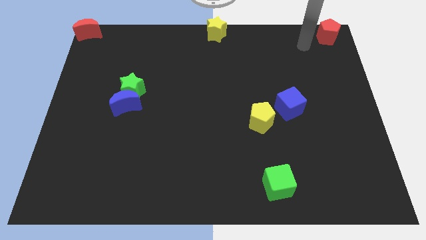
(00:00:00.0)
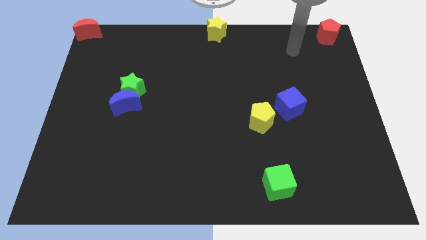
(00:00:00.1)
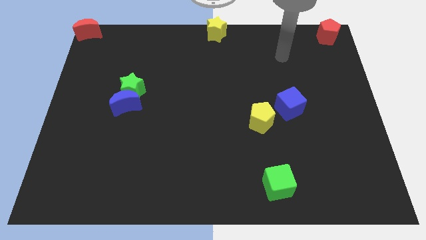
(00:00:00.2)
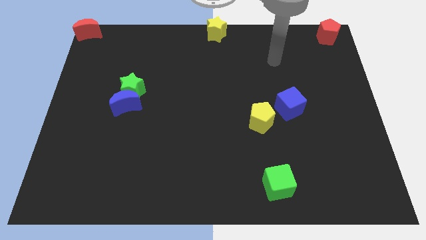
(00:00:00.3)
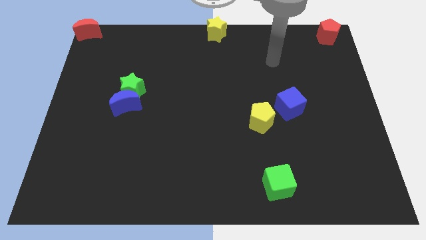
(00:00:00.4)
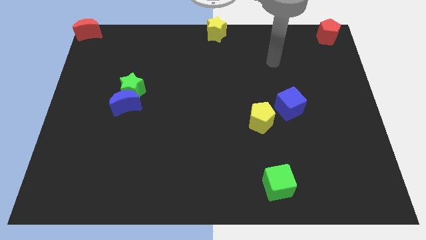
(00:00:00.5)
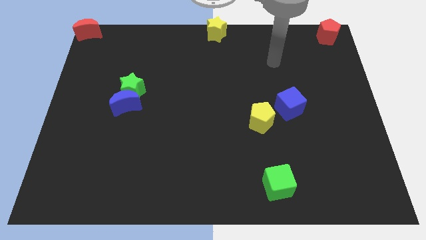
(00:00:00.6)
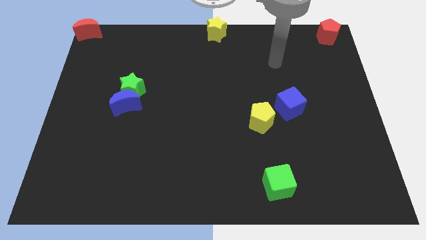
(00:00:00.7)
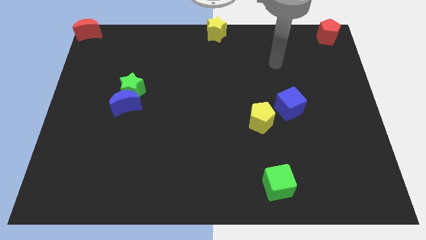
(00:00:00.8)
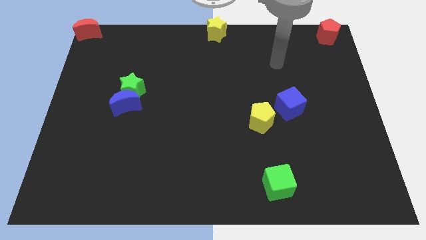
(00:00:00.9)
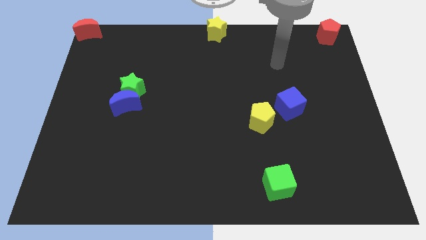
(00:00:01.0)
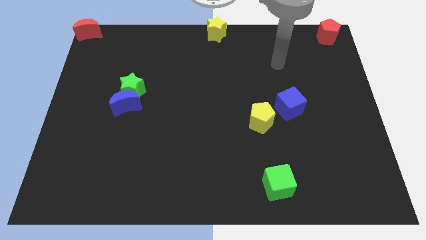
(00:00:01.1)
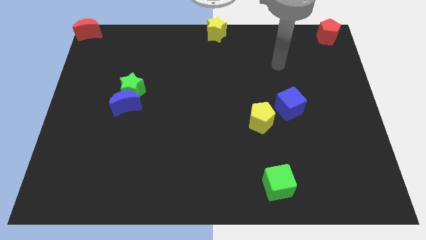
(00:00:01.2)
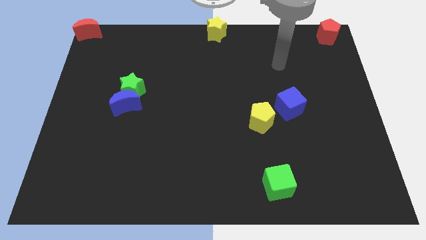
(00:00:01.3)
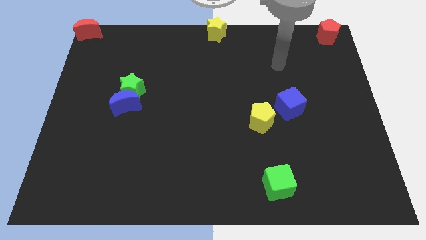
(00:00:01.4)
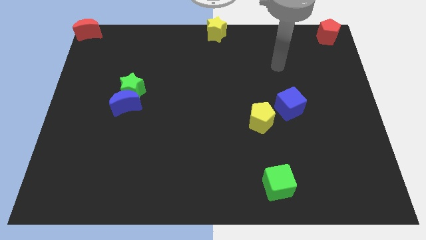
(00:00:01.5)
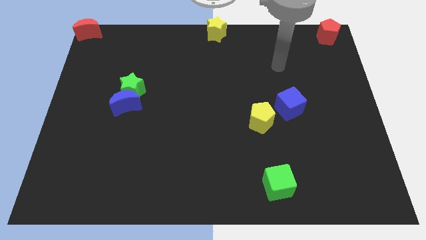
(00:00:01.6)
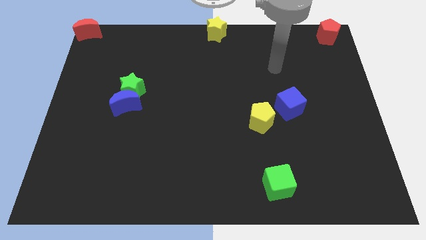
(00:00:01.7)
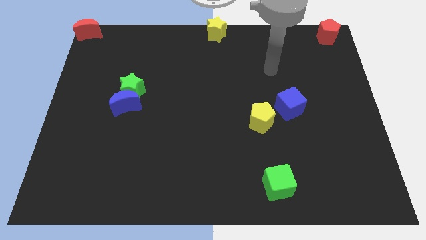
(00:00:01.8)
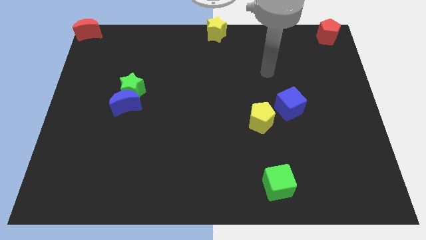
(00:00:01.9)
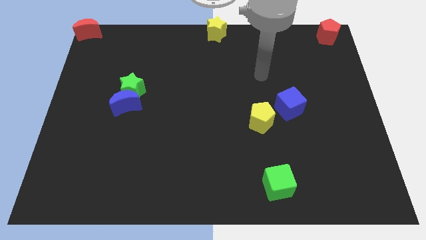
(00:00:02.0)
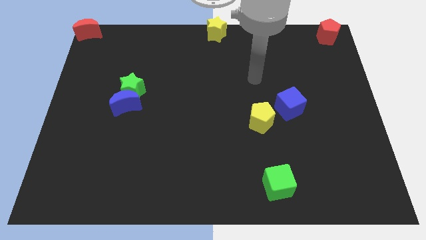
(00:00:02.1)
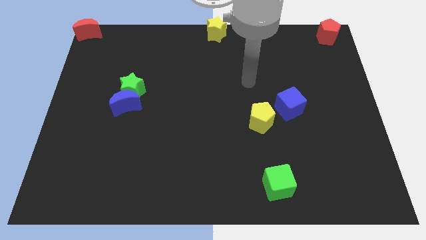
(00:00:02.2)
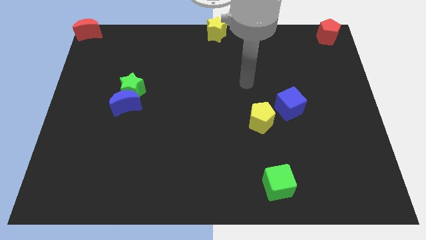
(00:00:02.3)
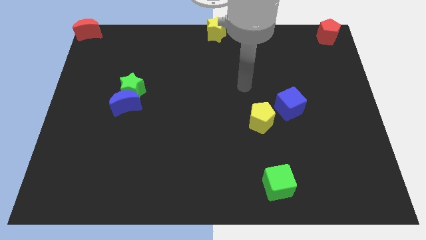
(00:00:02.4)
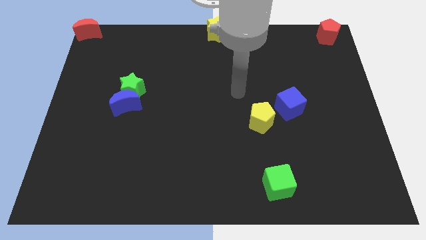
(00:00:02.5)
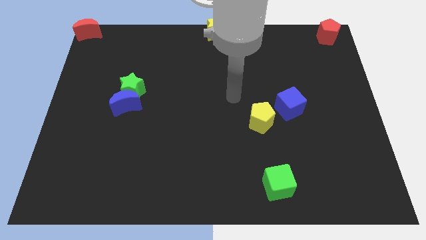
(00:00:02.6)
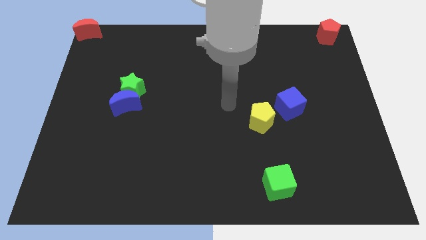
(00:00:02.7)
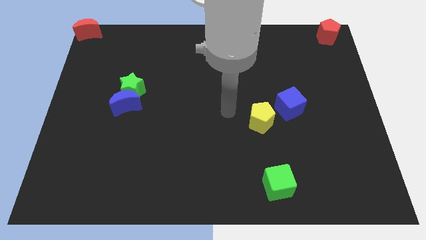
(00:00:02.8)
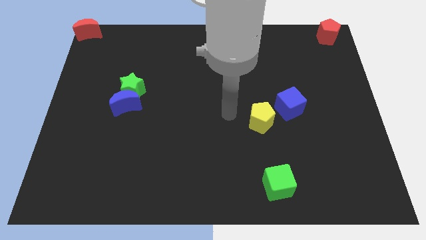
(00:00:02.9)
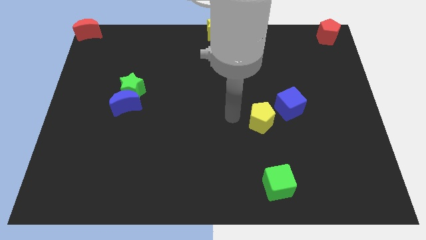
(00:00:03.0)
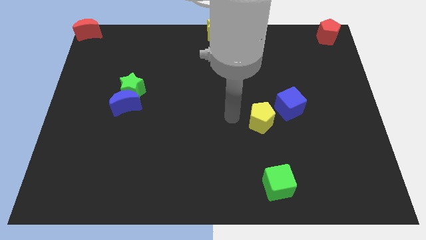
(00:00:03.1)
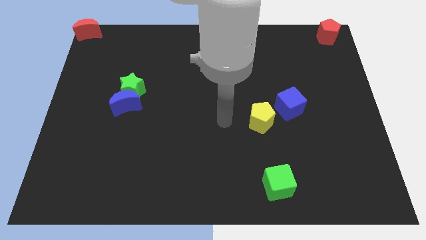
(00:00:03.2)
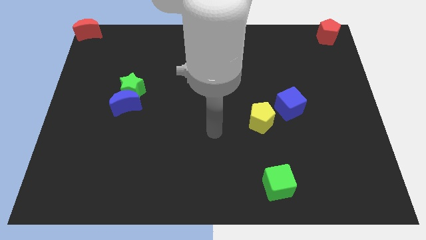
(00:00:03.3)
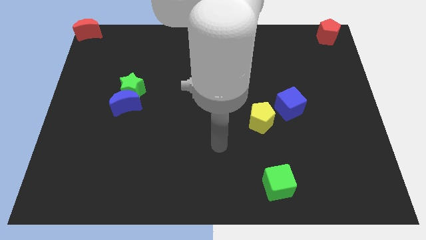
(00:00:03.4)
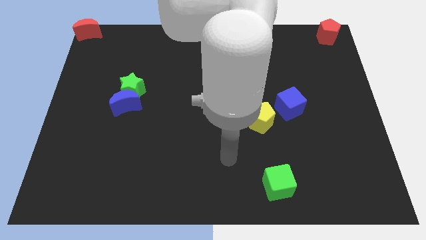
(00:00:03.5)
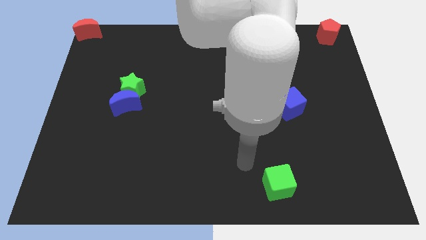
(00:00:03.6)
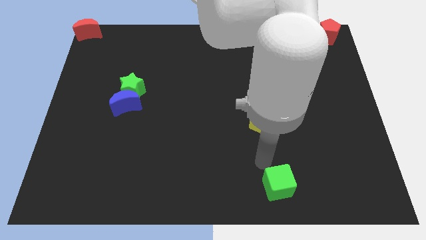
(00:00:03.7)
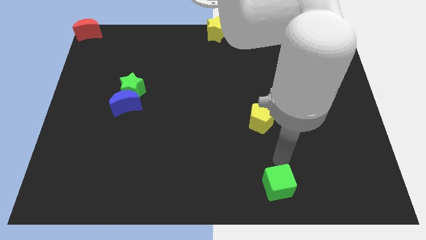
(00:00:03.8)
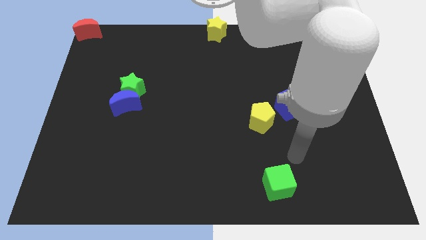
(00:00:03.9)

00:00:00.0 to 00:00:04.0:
point your arm at the top of the green cube

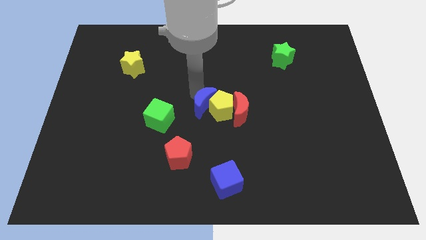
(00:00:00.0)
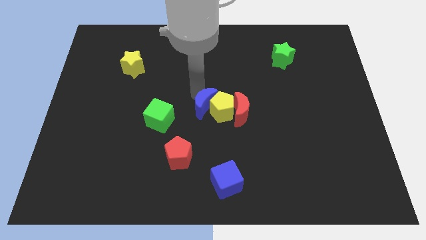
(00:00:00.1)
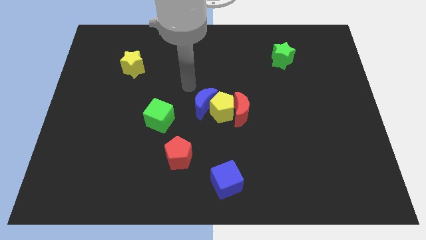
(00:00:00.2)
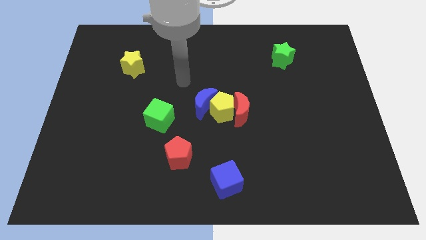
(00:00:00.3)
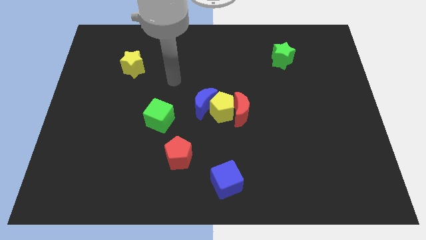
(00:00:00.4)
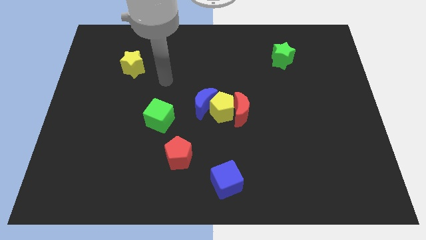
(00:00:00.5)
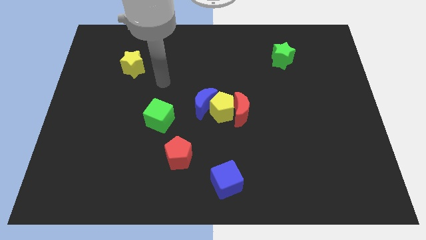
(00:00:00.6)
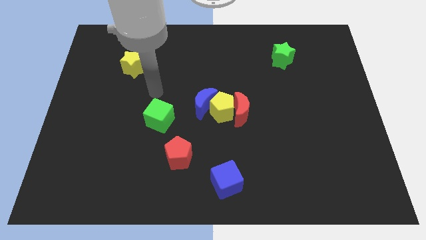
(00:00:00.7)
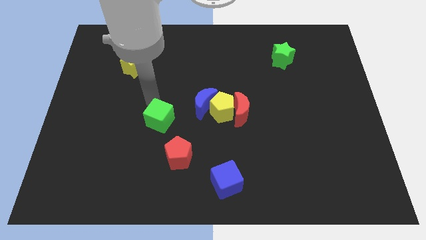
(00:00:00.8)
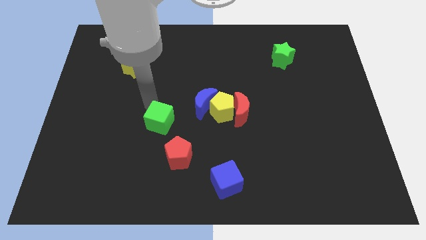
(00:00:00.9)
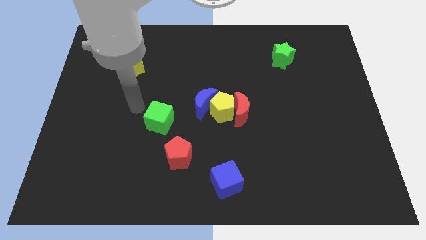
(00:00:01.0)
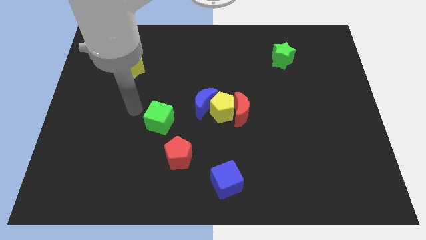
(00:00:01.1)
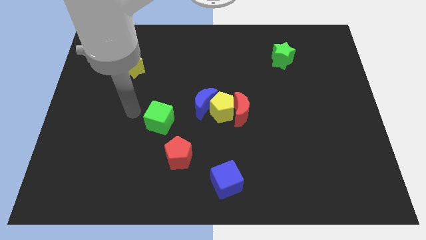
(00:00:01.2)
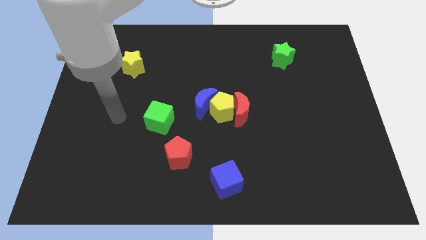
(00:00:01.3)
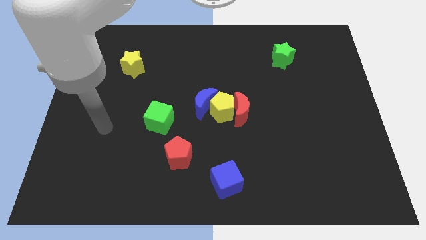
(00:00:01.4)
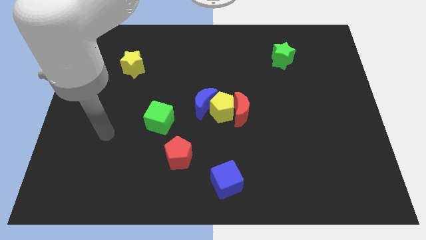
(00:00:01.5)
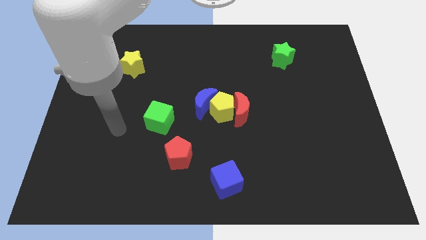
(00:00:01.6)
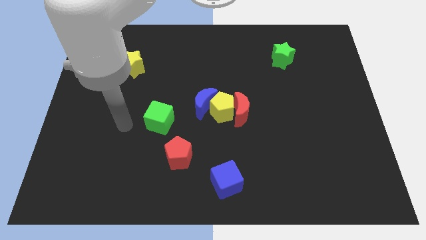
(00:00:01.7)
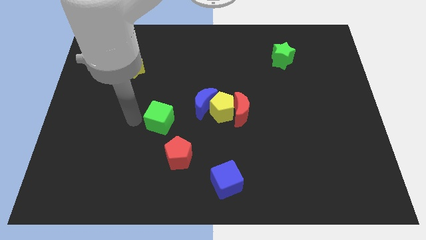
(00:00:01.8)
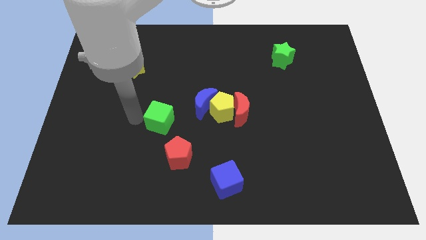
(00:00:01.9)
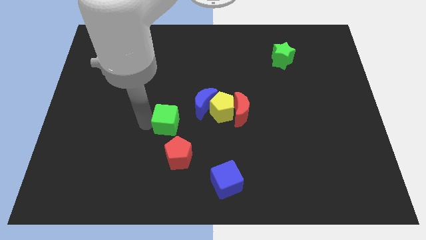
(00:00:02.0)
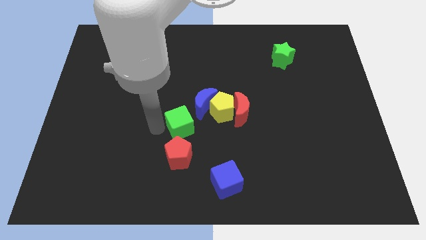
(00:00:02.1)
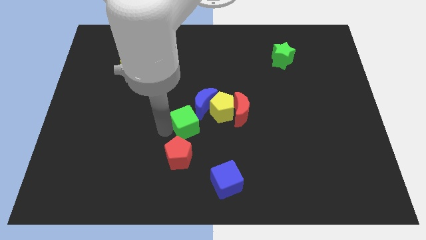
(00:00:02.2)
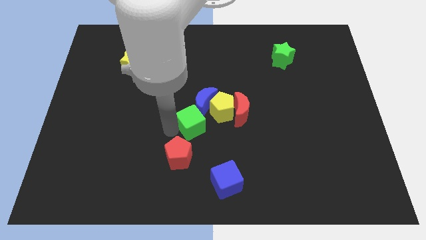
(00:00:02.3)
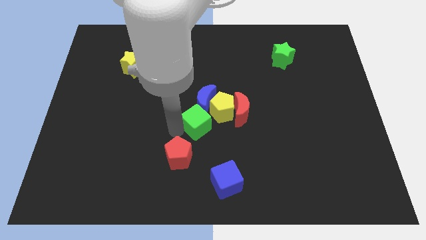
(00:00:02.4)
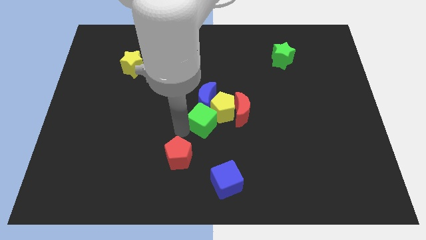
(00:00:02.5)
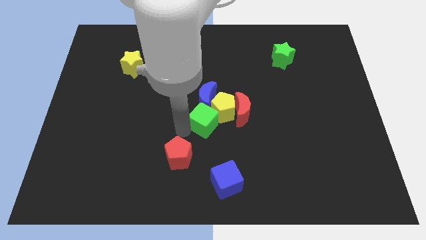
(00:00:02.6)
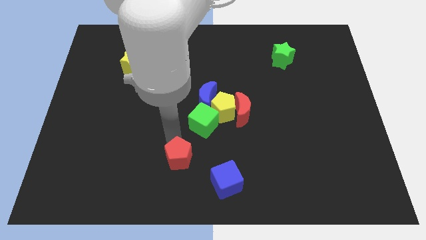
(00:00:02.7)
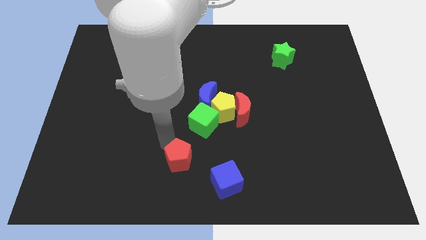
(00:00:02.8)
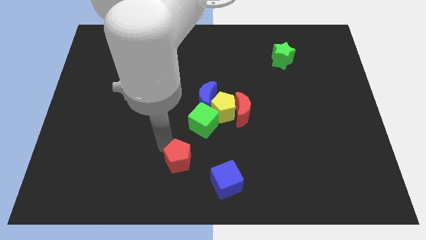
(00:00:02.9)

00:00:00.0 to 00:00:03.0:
push the green cube into yellow pentagon

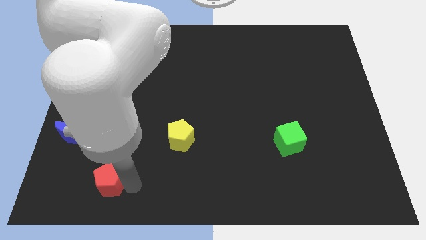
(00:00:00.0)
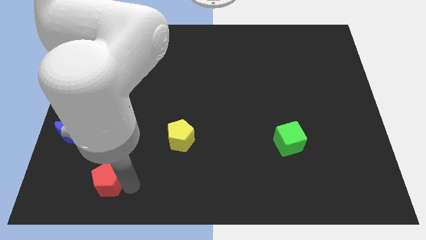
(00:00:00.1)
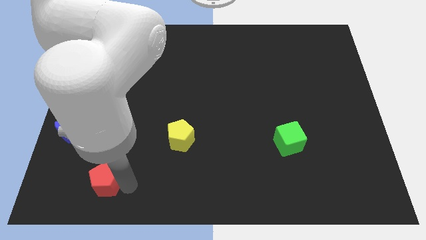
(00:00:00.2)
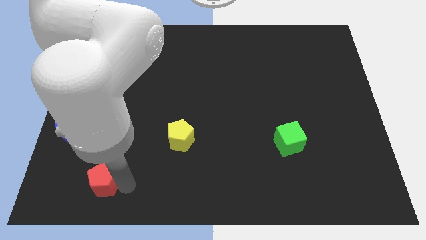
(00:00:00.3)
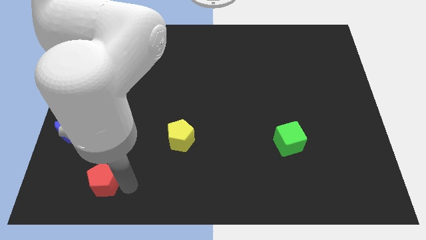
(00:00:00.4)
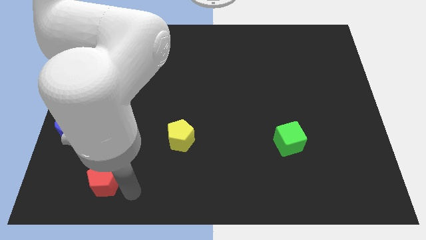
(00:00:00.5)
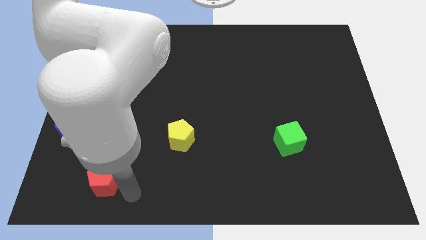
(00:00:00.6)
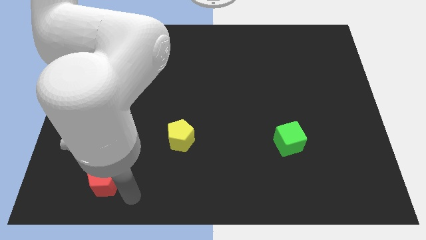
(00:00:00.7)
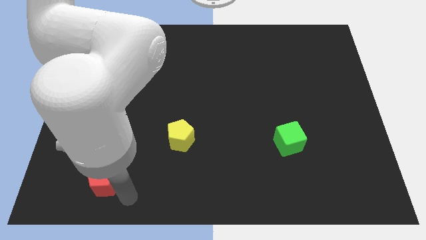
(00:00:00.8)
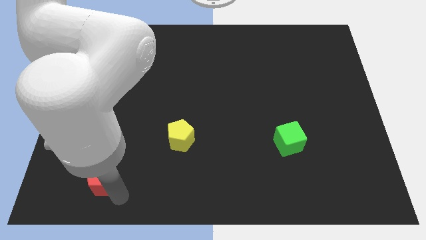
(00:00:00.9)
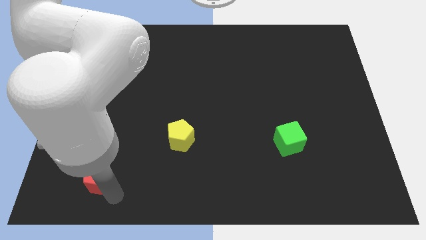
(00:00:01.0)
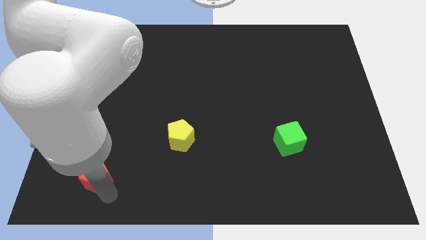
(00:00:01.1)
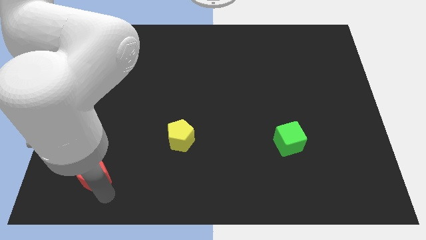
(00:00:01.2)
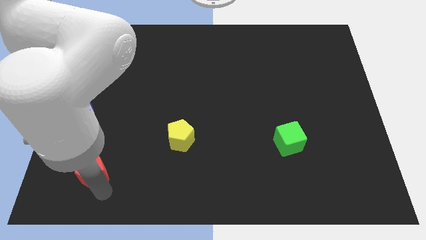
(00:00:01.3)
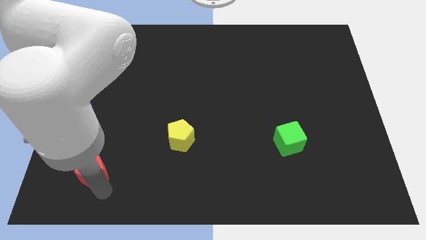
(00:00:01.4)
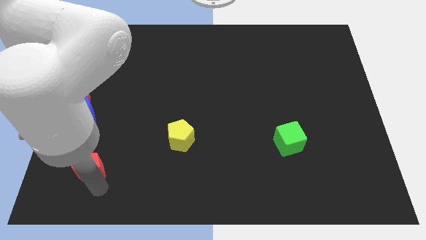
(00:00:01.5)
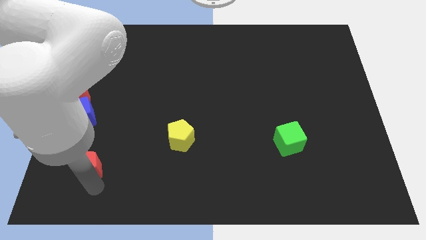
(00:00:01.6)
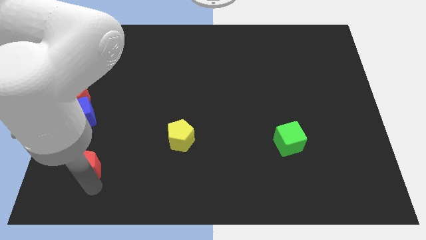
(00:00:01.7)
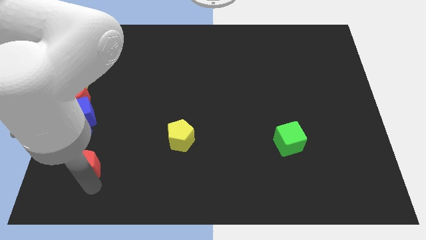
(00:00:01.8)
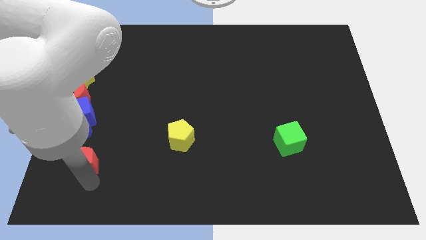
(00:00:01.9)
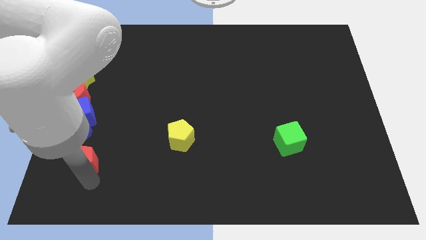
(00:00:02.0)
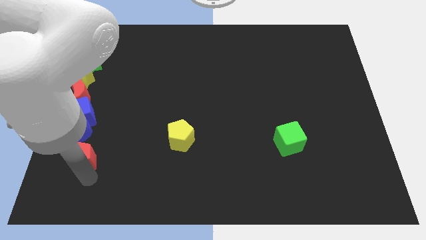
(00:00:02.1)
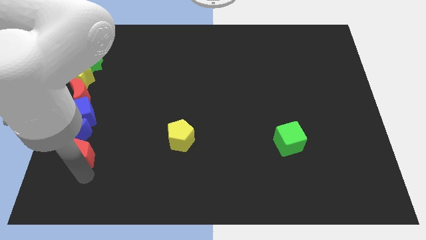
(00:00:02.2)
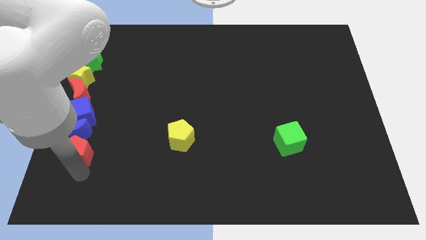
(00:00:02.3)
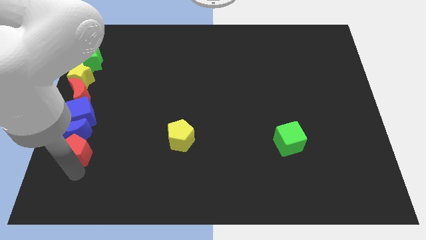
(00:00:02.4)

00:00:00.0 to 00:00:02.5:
place red pentagon below blue crescent
